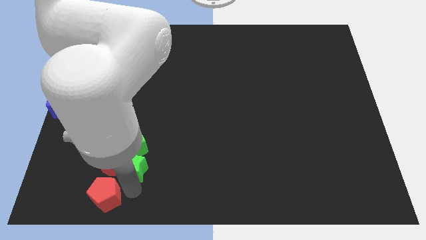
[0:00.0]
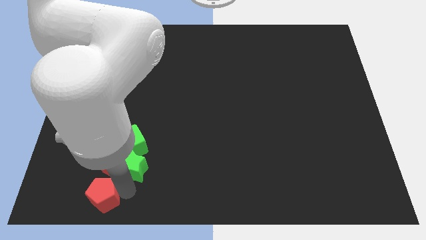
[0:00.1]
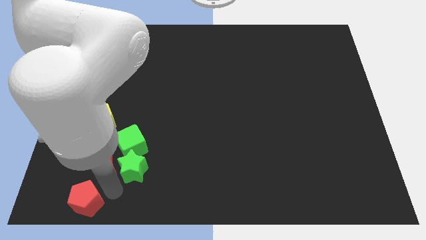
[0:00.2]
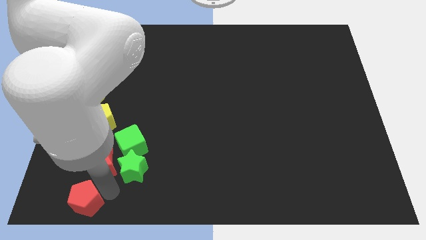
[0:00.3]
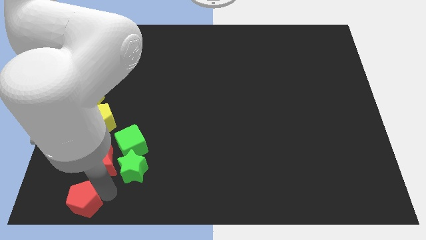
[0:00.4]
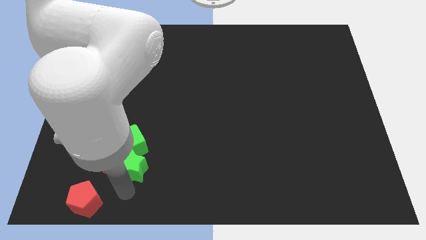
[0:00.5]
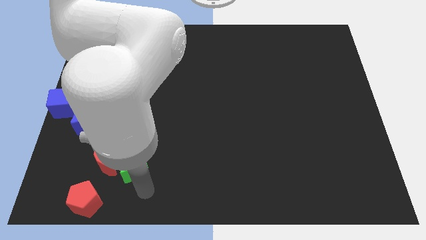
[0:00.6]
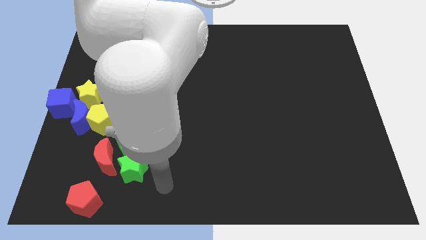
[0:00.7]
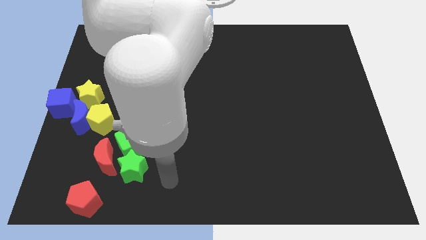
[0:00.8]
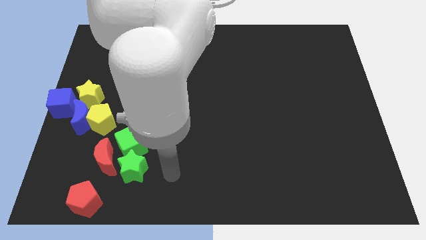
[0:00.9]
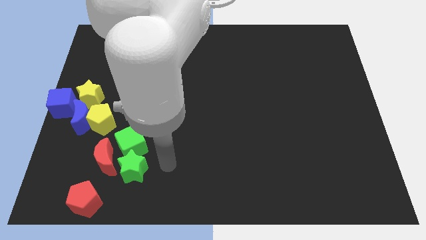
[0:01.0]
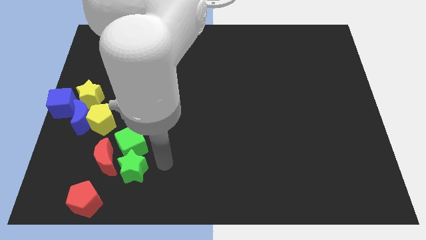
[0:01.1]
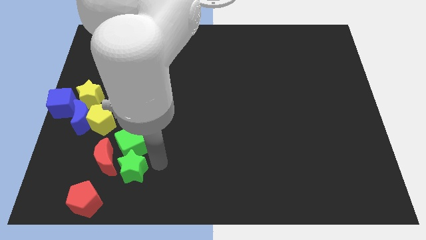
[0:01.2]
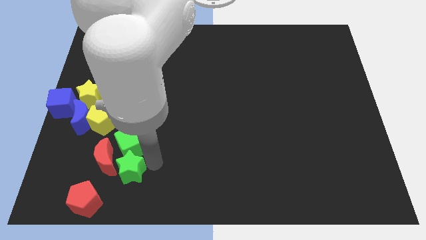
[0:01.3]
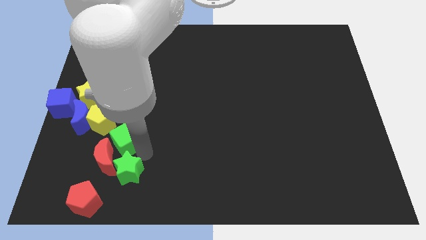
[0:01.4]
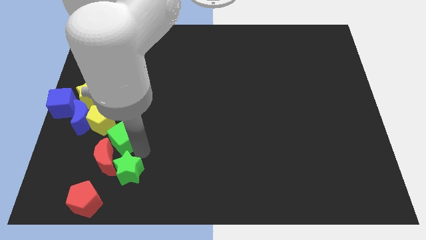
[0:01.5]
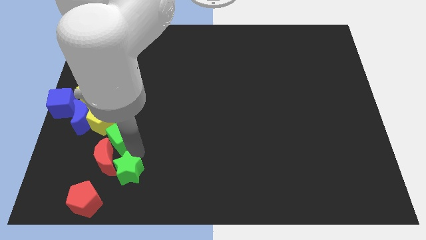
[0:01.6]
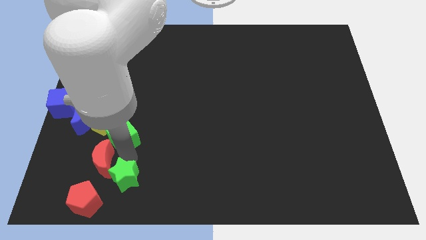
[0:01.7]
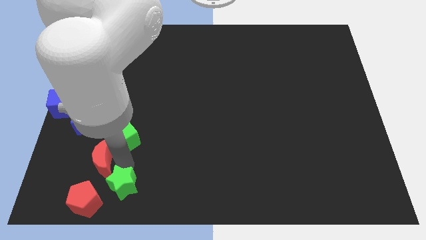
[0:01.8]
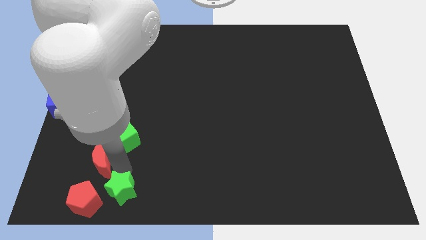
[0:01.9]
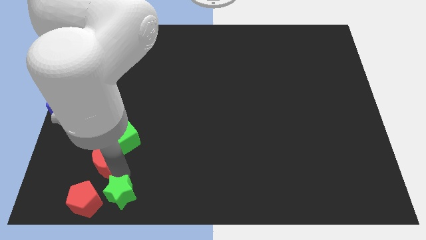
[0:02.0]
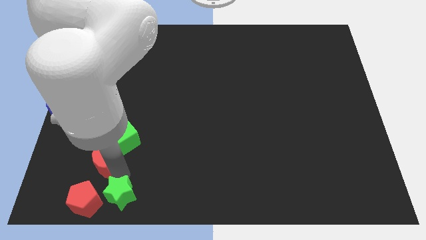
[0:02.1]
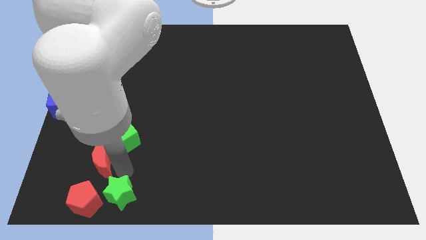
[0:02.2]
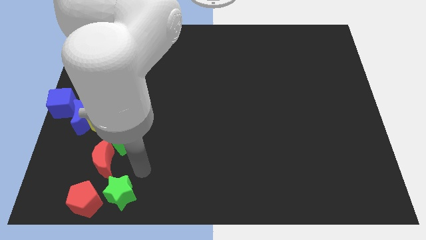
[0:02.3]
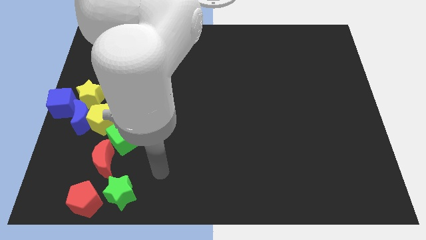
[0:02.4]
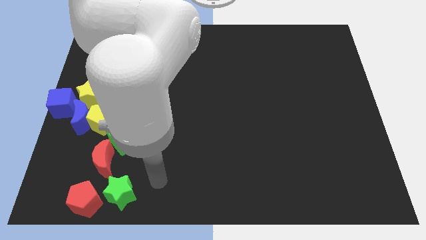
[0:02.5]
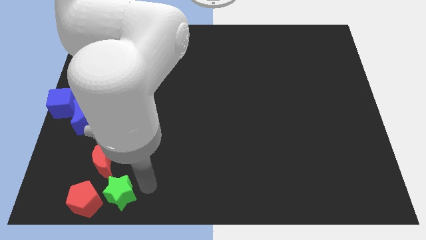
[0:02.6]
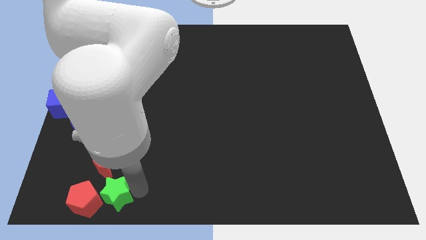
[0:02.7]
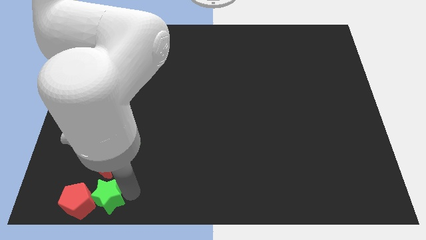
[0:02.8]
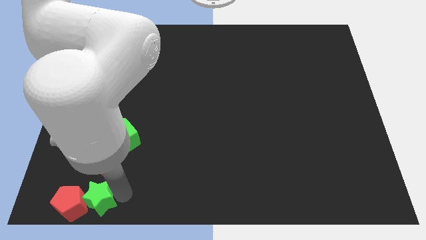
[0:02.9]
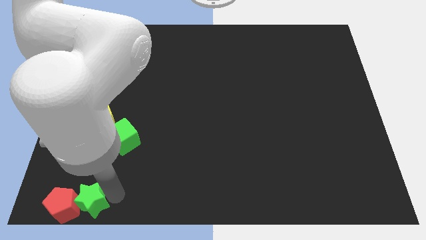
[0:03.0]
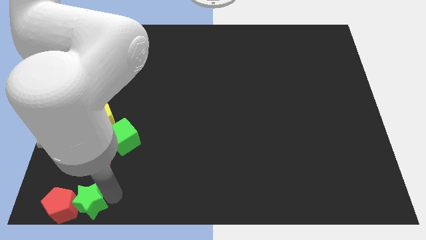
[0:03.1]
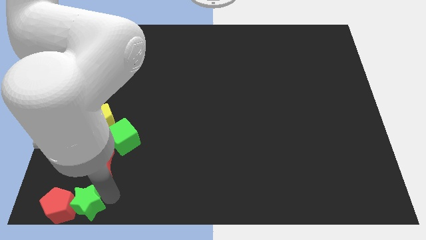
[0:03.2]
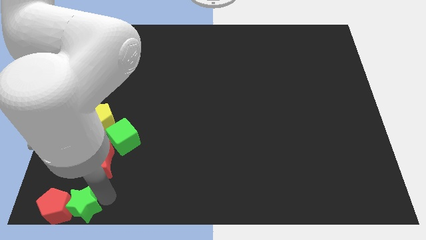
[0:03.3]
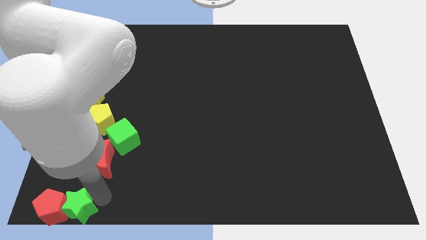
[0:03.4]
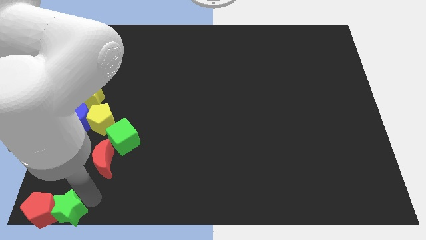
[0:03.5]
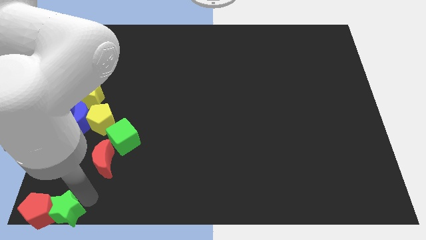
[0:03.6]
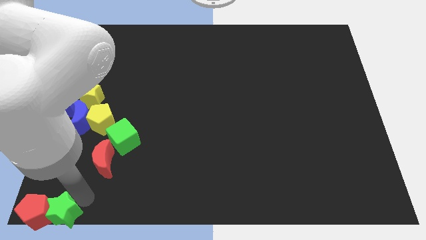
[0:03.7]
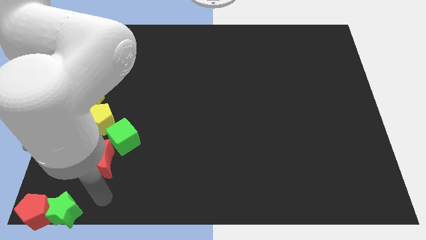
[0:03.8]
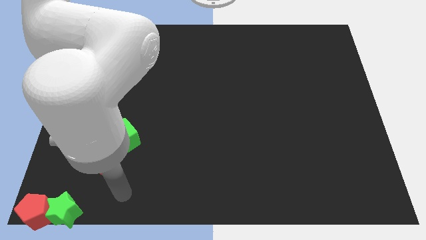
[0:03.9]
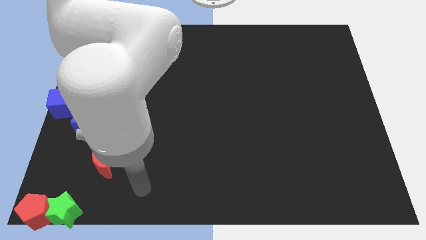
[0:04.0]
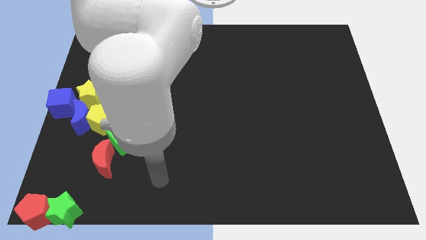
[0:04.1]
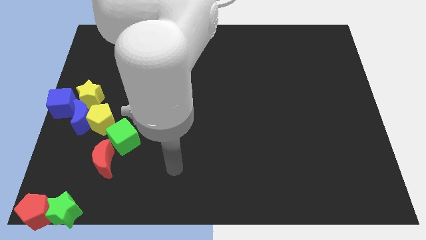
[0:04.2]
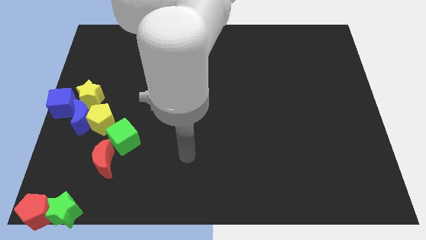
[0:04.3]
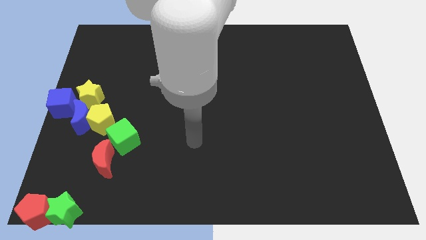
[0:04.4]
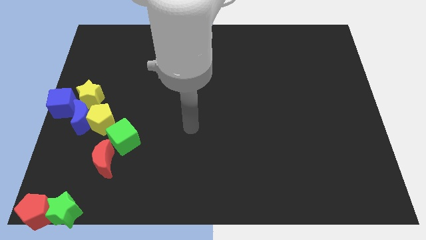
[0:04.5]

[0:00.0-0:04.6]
push the red pentagon and the green star to the bottom left corner of the board

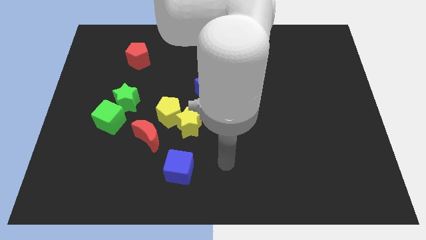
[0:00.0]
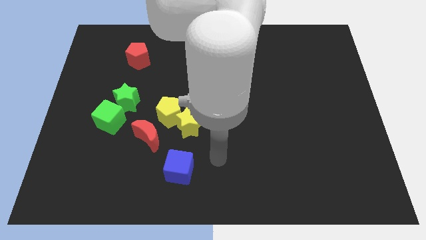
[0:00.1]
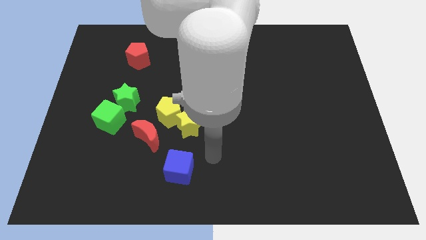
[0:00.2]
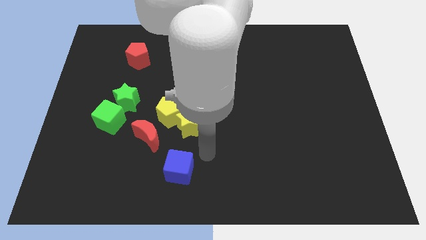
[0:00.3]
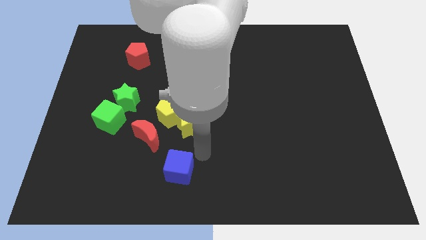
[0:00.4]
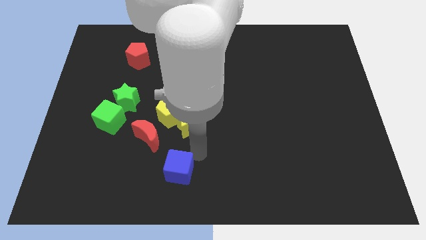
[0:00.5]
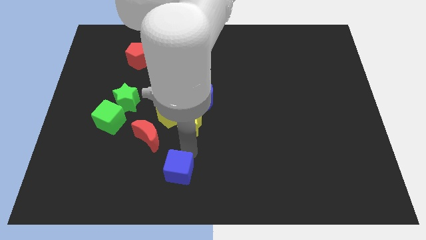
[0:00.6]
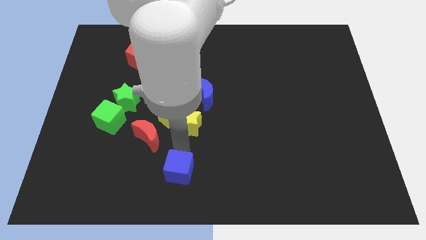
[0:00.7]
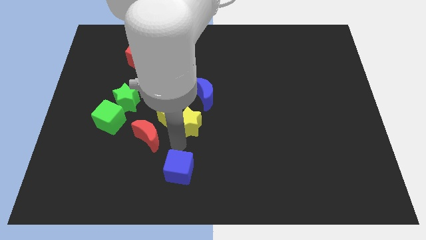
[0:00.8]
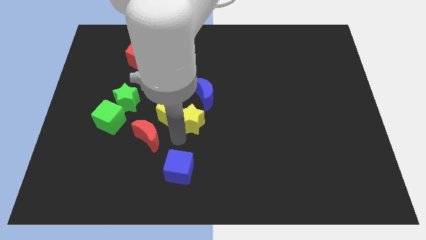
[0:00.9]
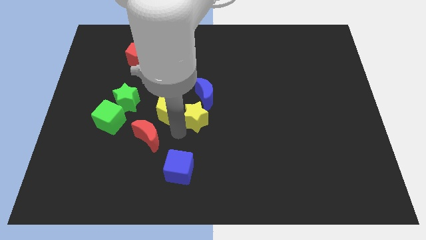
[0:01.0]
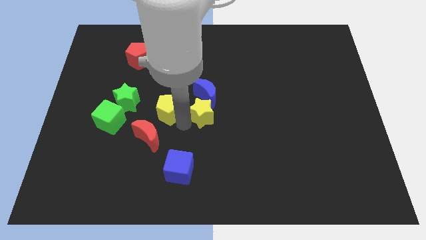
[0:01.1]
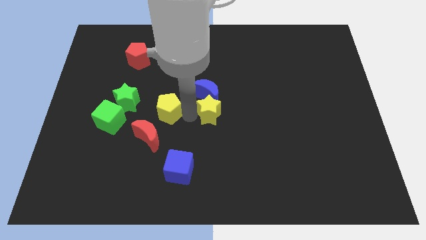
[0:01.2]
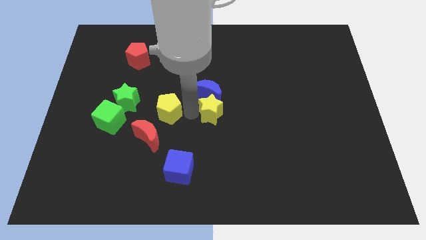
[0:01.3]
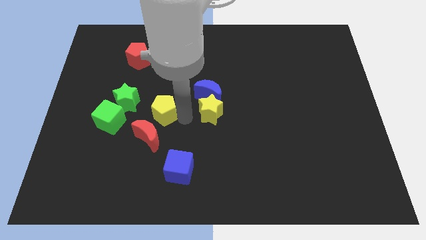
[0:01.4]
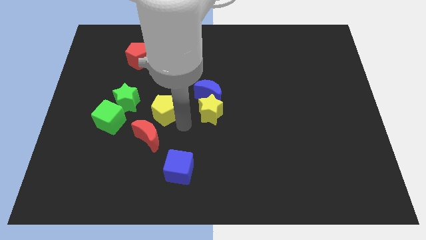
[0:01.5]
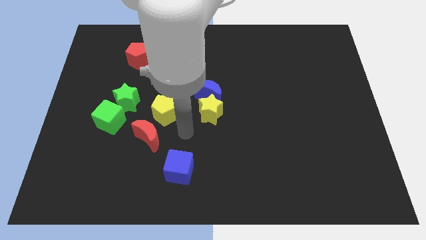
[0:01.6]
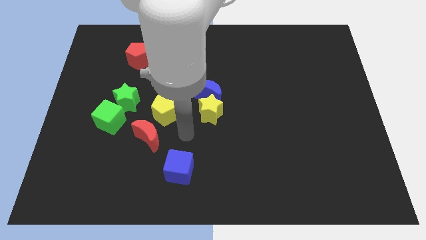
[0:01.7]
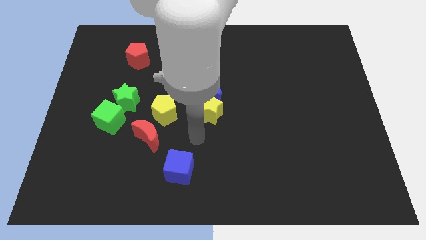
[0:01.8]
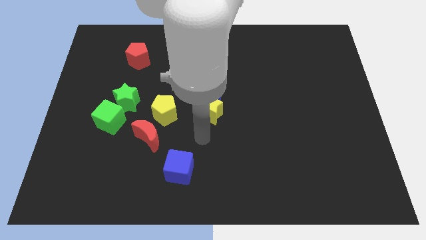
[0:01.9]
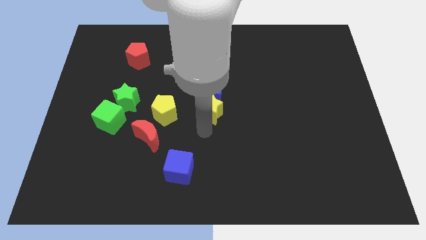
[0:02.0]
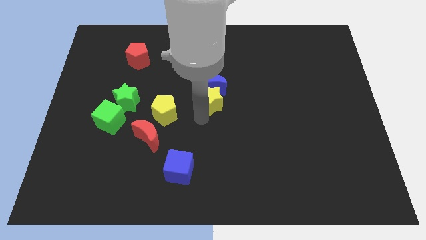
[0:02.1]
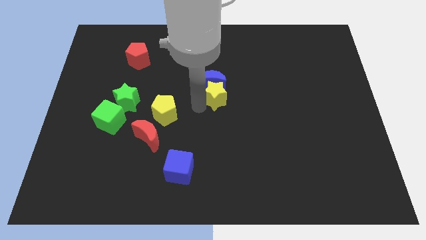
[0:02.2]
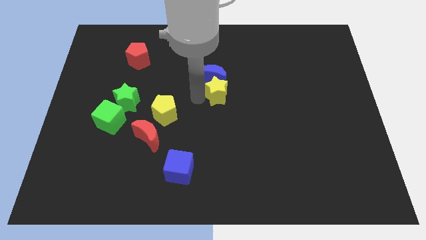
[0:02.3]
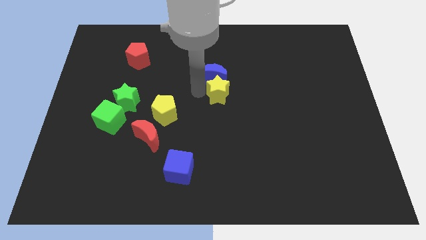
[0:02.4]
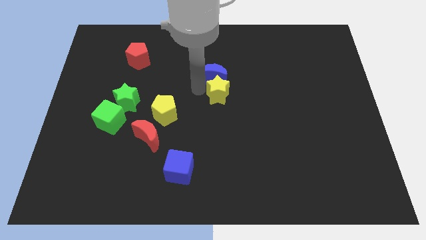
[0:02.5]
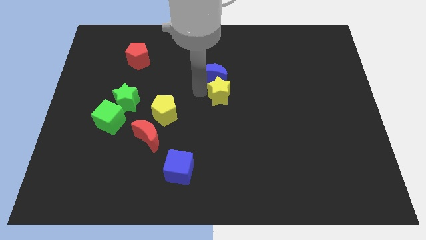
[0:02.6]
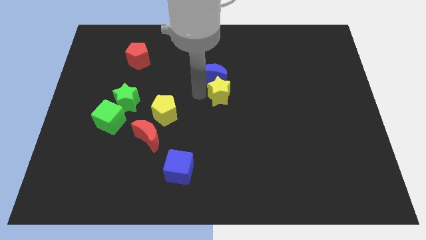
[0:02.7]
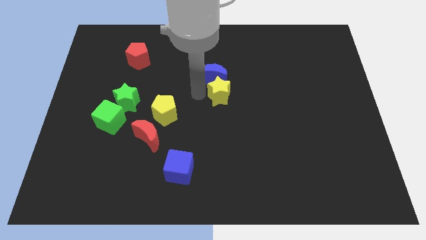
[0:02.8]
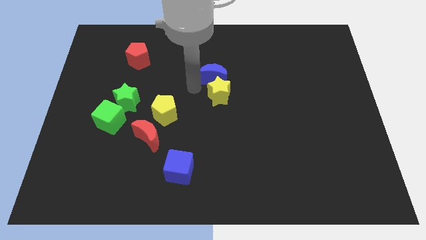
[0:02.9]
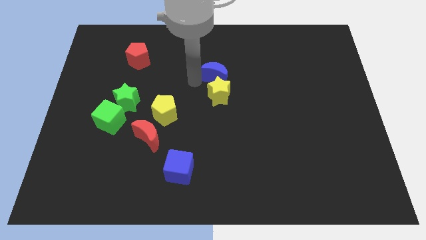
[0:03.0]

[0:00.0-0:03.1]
slide yellow star upwards with the blue crescent

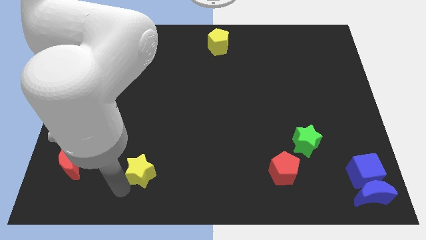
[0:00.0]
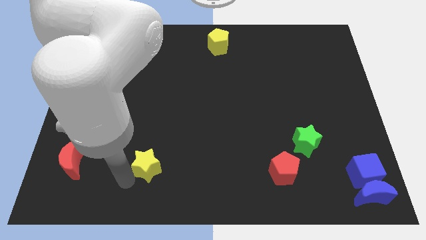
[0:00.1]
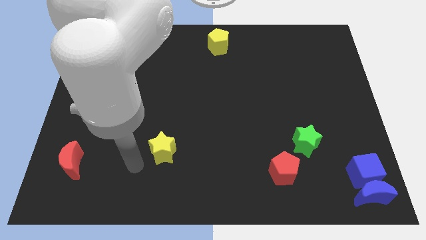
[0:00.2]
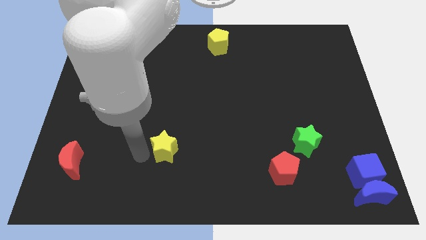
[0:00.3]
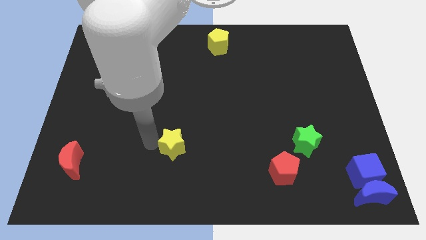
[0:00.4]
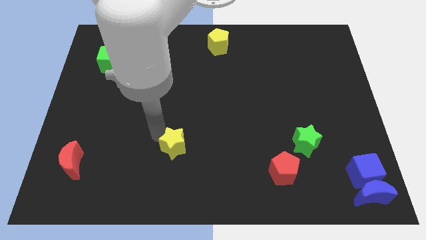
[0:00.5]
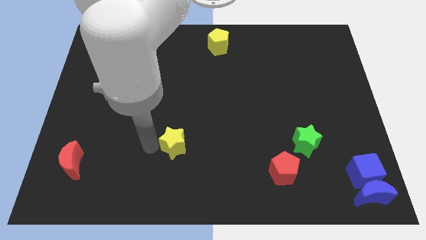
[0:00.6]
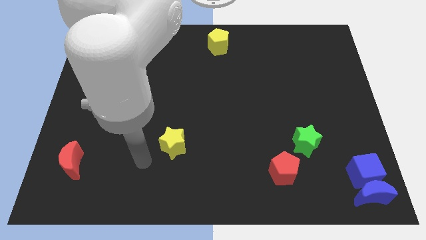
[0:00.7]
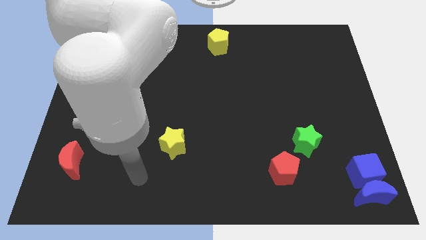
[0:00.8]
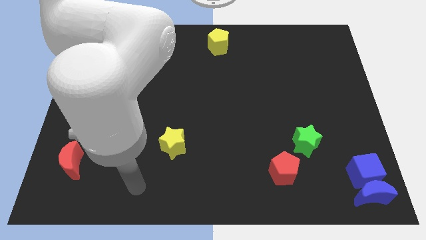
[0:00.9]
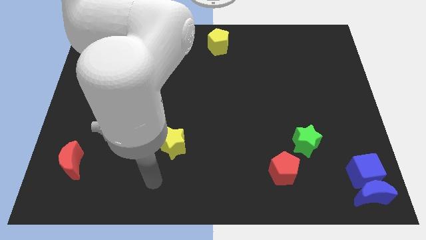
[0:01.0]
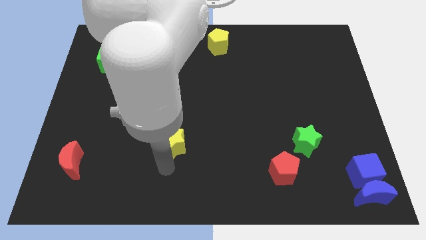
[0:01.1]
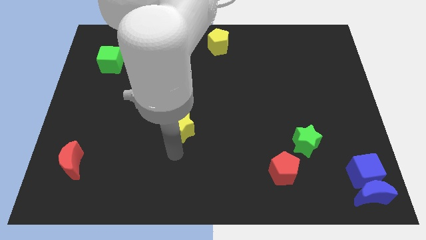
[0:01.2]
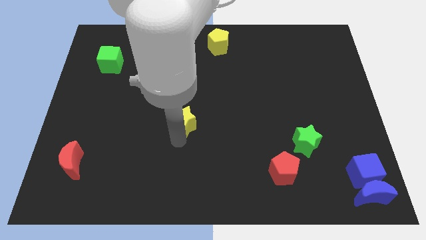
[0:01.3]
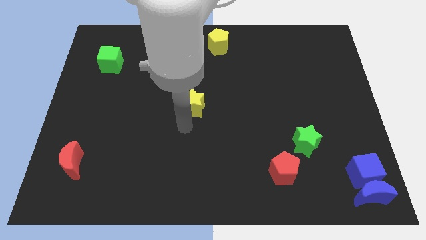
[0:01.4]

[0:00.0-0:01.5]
drag yellow star towards middle of the board
